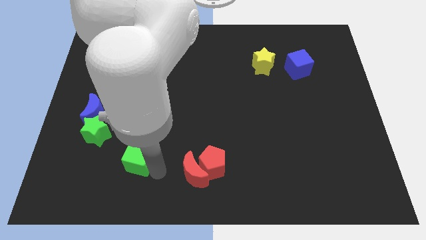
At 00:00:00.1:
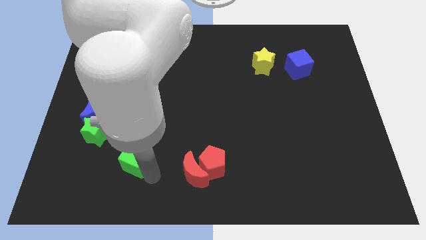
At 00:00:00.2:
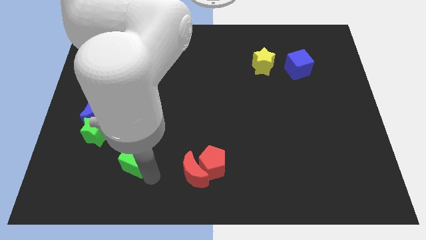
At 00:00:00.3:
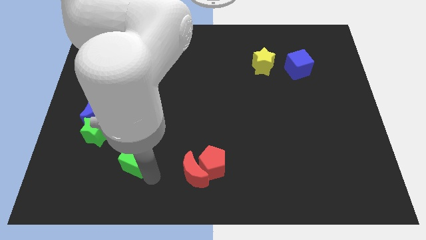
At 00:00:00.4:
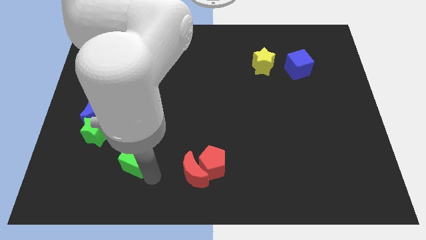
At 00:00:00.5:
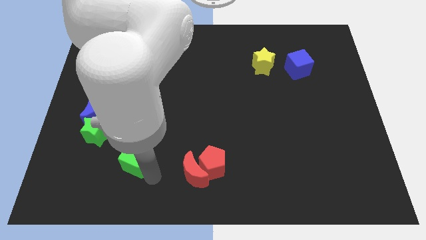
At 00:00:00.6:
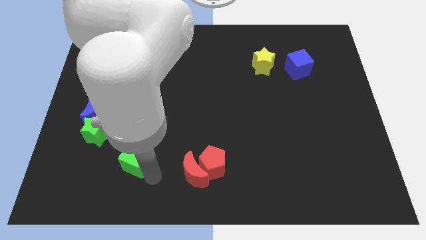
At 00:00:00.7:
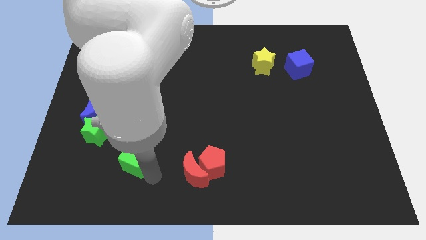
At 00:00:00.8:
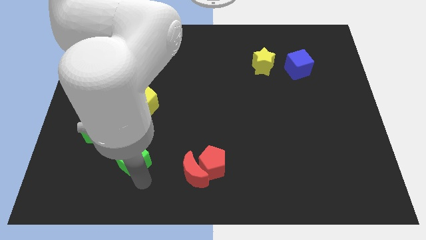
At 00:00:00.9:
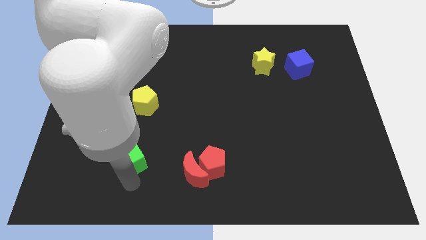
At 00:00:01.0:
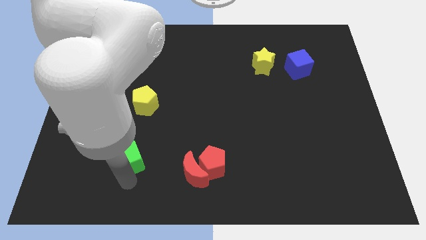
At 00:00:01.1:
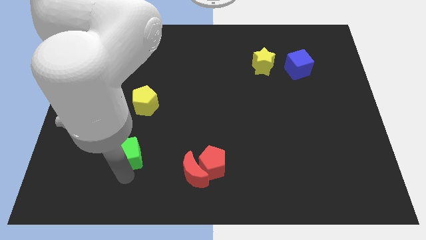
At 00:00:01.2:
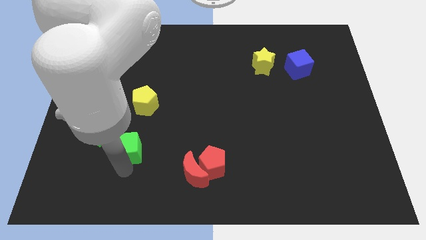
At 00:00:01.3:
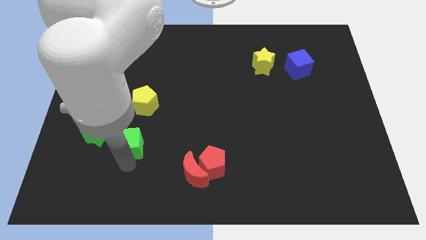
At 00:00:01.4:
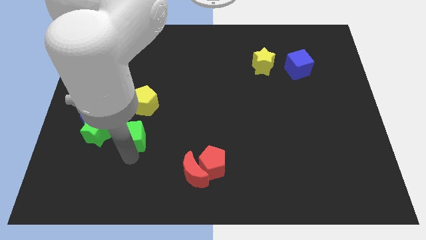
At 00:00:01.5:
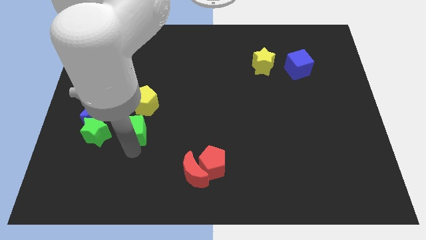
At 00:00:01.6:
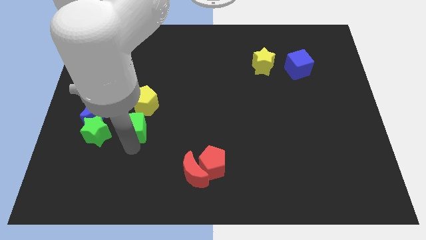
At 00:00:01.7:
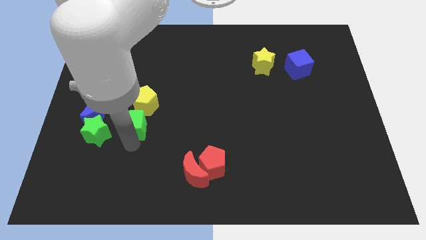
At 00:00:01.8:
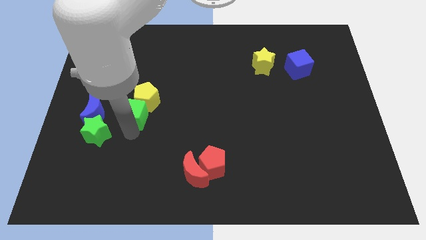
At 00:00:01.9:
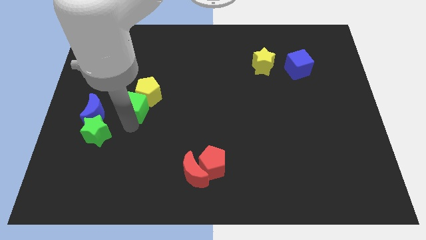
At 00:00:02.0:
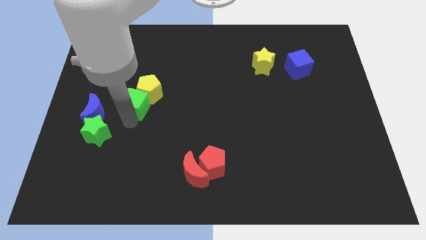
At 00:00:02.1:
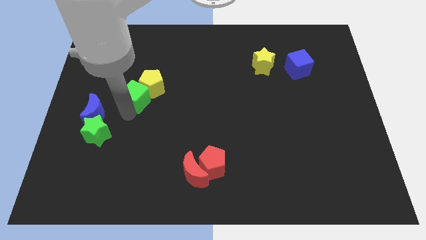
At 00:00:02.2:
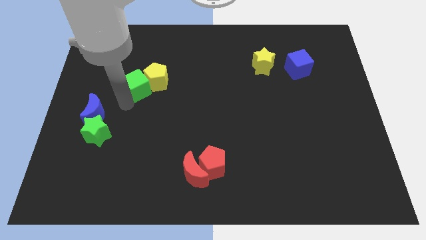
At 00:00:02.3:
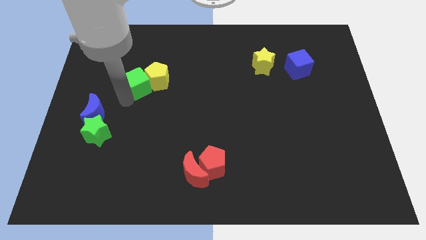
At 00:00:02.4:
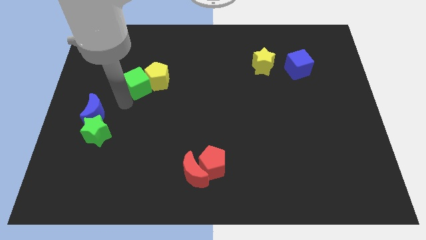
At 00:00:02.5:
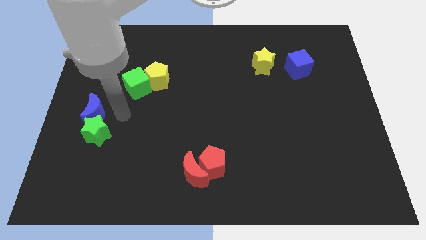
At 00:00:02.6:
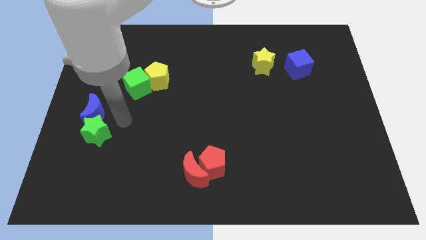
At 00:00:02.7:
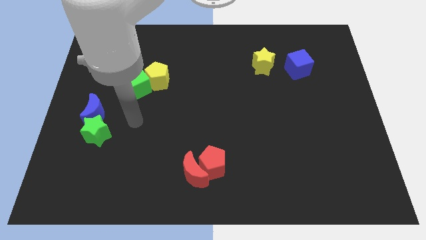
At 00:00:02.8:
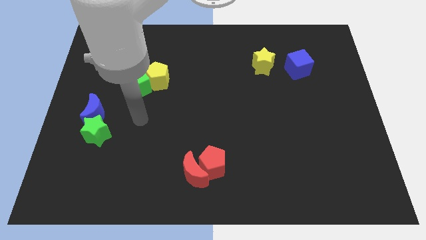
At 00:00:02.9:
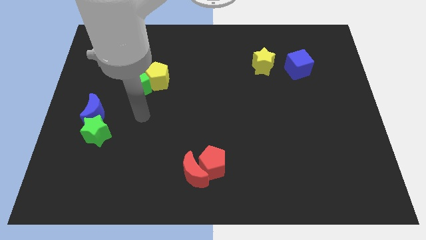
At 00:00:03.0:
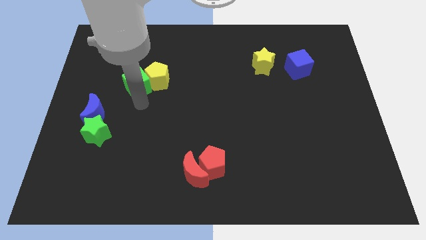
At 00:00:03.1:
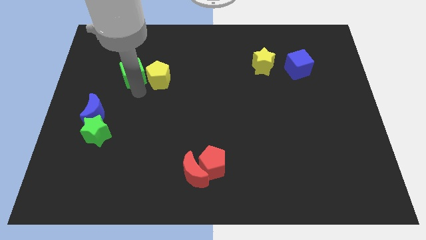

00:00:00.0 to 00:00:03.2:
push the green cube into the yellow pentagon

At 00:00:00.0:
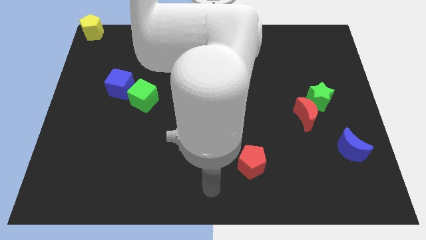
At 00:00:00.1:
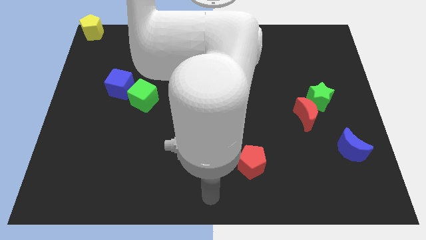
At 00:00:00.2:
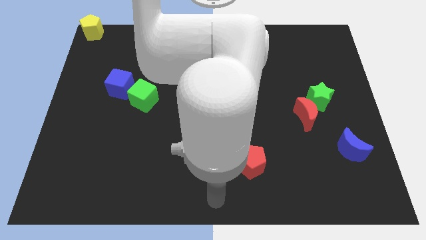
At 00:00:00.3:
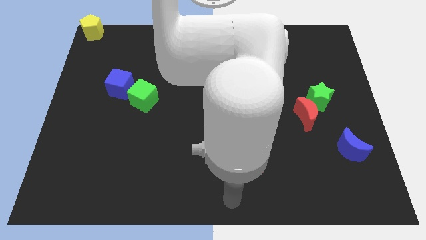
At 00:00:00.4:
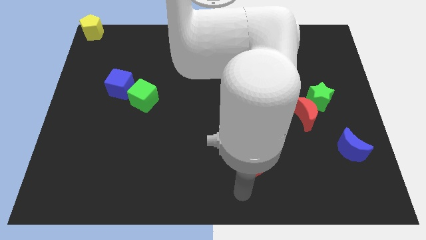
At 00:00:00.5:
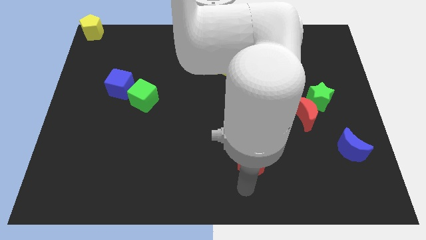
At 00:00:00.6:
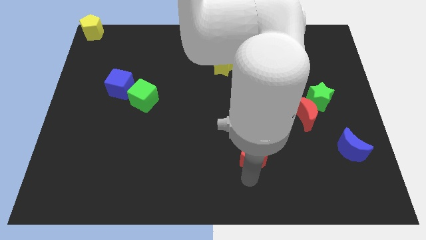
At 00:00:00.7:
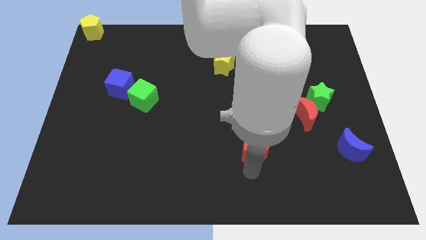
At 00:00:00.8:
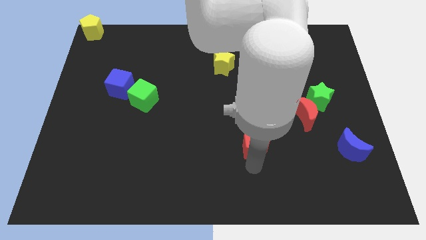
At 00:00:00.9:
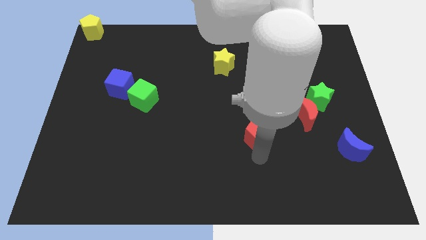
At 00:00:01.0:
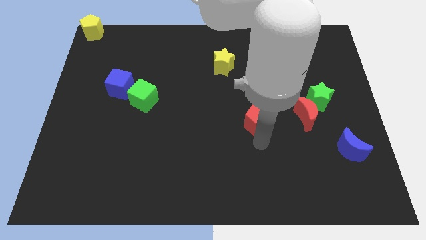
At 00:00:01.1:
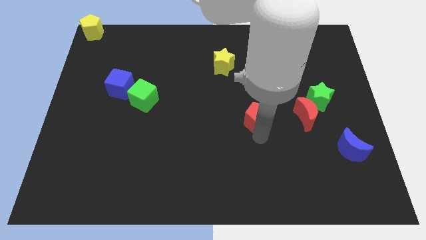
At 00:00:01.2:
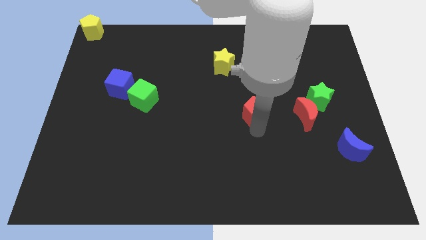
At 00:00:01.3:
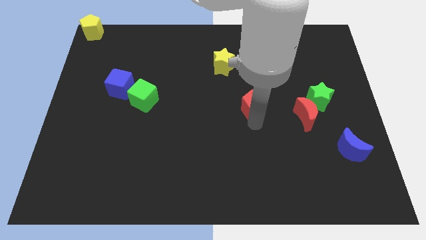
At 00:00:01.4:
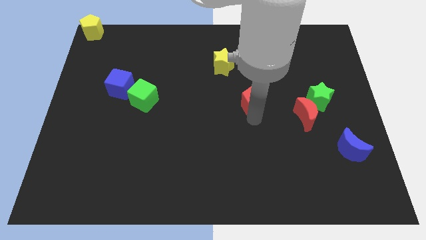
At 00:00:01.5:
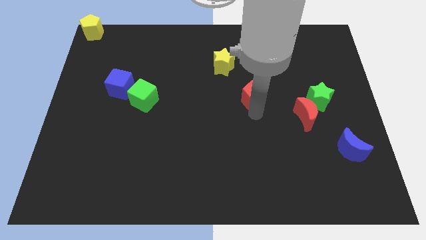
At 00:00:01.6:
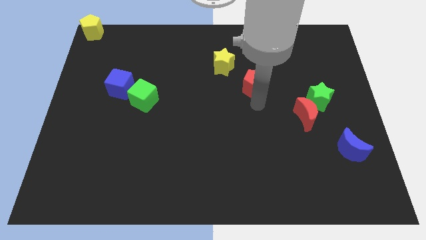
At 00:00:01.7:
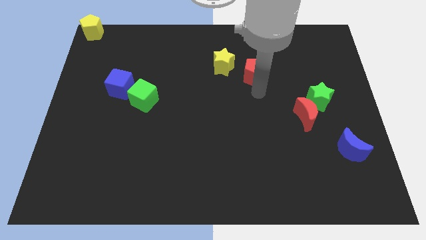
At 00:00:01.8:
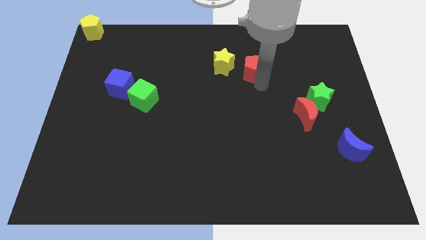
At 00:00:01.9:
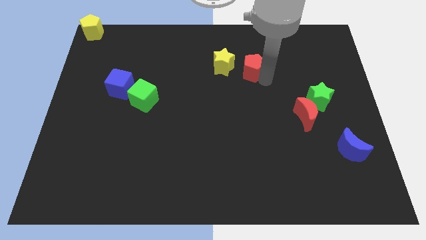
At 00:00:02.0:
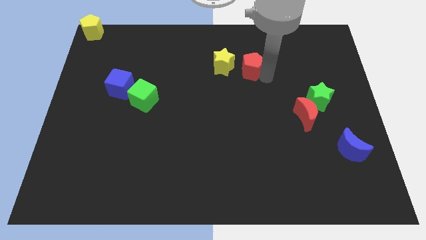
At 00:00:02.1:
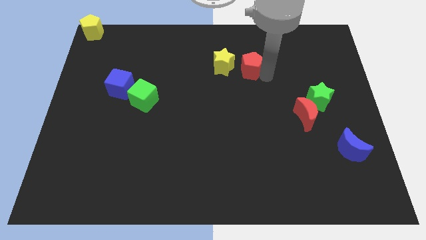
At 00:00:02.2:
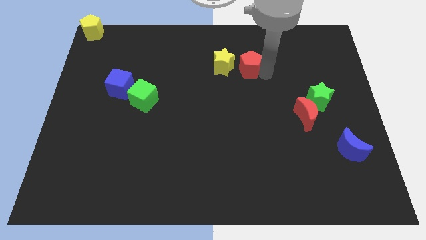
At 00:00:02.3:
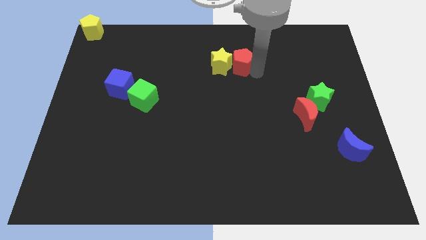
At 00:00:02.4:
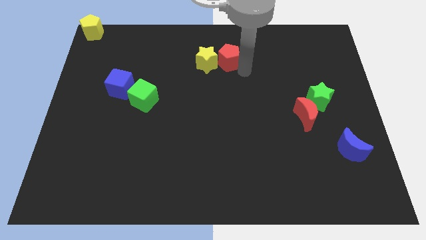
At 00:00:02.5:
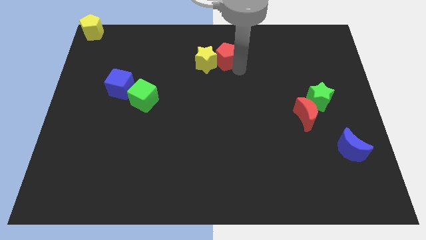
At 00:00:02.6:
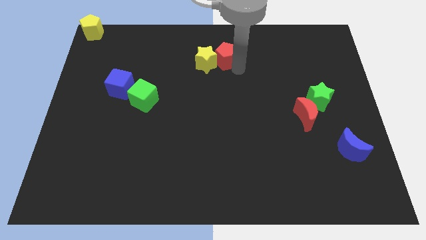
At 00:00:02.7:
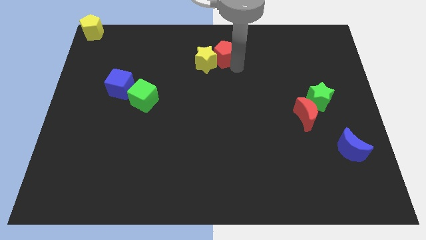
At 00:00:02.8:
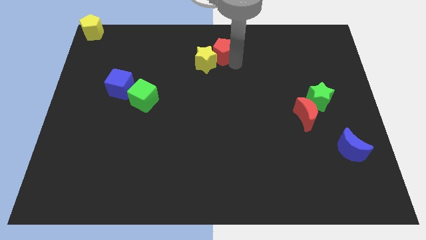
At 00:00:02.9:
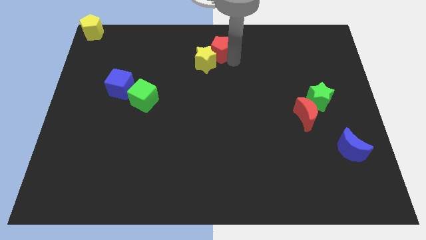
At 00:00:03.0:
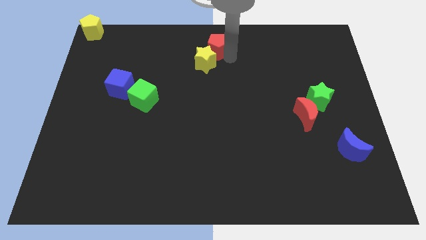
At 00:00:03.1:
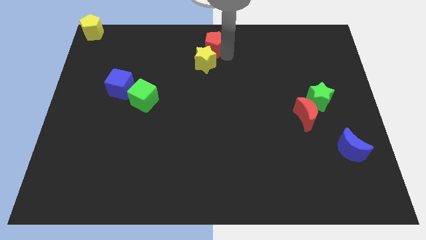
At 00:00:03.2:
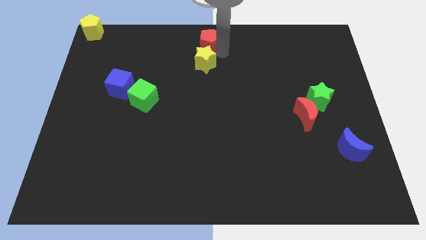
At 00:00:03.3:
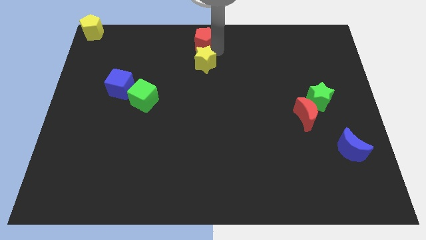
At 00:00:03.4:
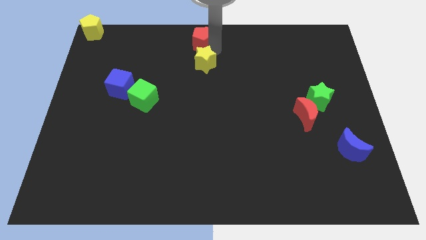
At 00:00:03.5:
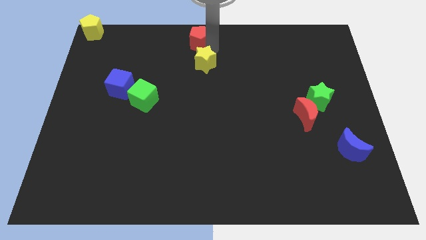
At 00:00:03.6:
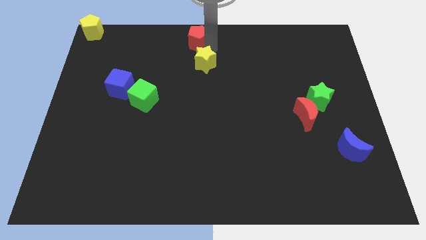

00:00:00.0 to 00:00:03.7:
place red pentagon to the top center of the board

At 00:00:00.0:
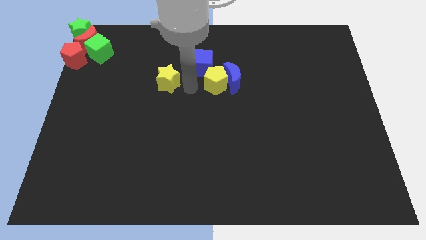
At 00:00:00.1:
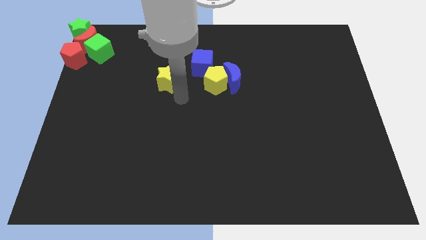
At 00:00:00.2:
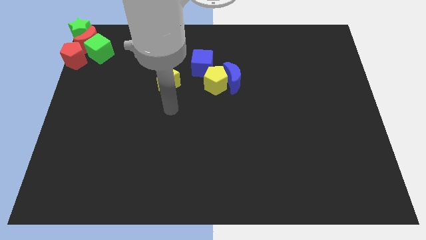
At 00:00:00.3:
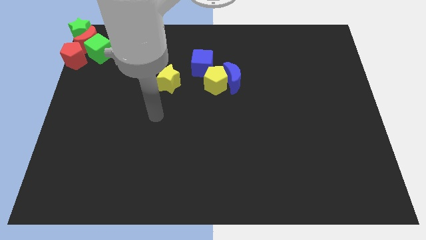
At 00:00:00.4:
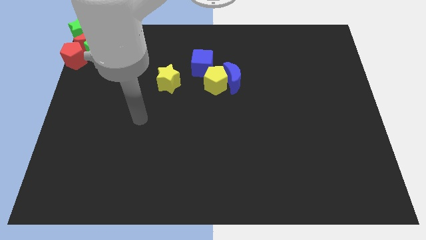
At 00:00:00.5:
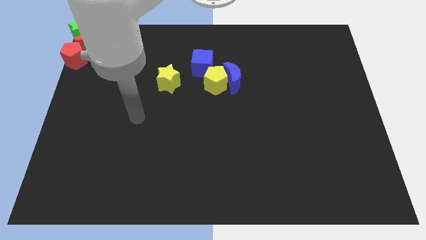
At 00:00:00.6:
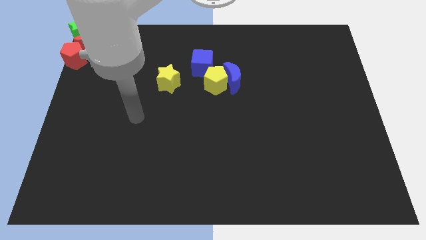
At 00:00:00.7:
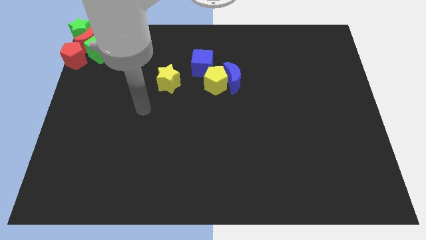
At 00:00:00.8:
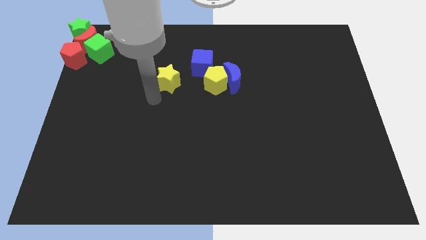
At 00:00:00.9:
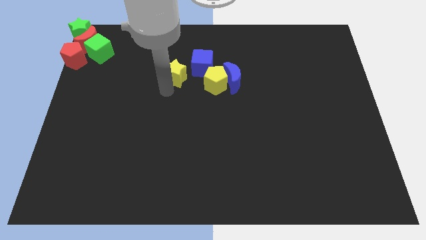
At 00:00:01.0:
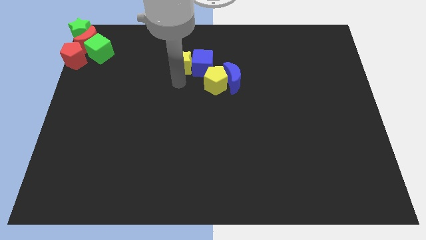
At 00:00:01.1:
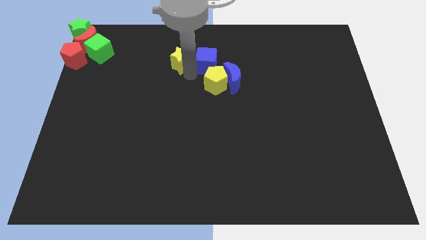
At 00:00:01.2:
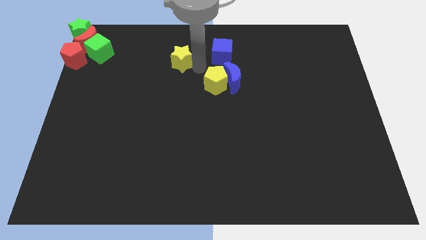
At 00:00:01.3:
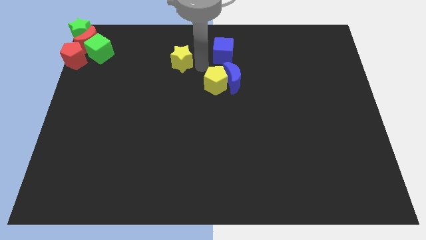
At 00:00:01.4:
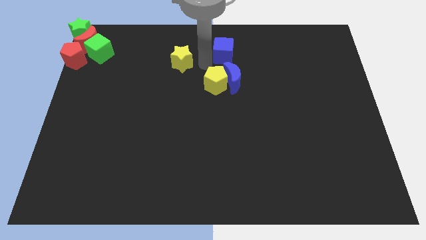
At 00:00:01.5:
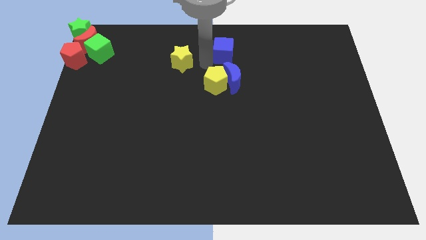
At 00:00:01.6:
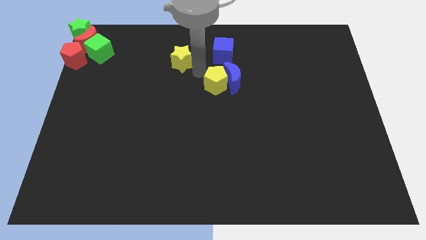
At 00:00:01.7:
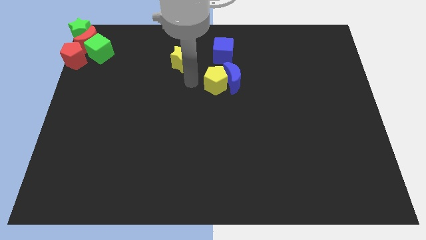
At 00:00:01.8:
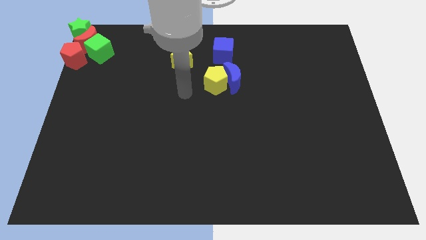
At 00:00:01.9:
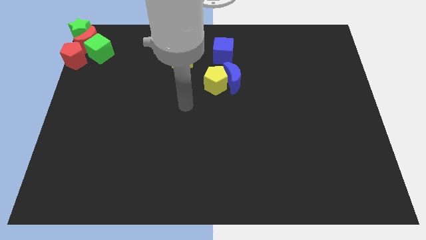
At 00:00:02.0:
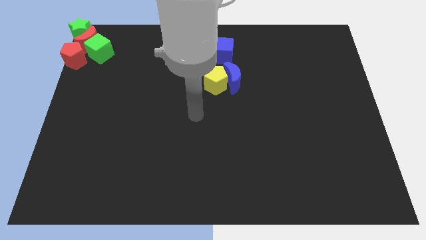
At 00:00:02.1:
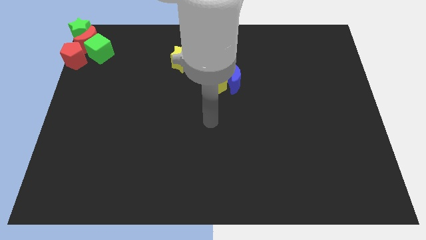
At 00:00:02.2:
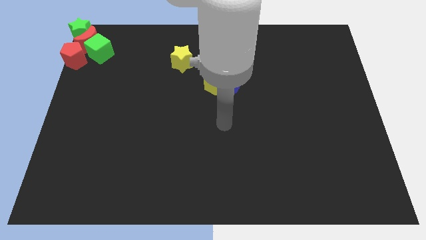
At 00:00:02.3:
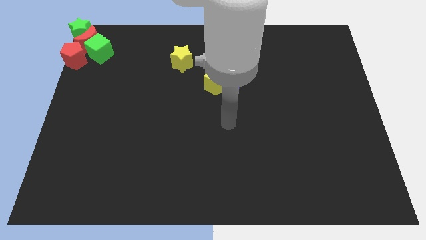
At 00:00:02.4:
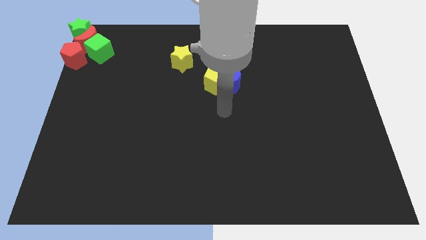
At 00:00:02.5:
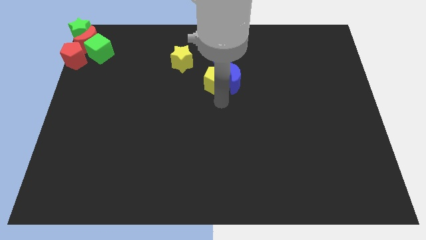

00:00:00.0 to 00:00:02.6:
put the blue cube to the right of the yellow star
